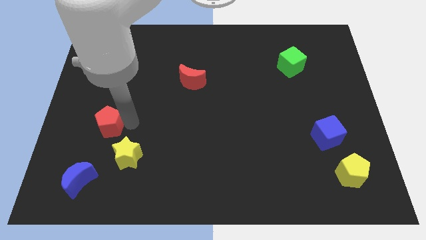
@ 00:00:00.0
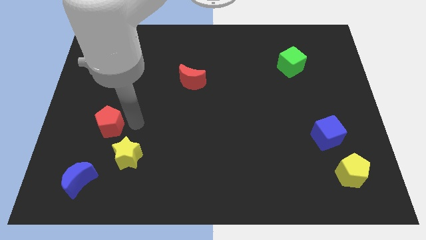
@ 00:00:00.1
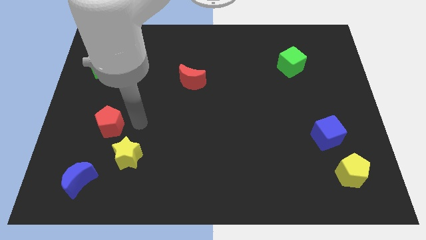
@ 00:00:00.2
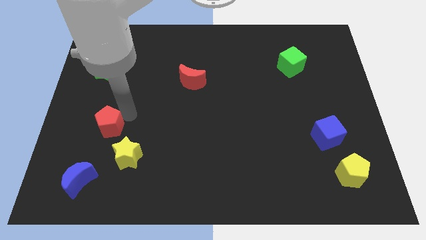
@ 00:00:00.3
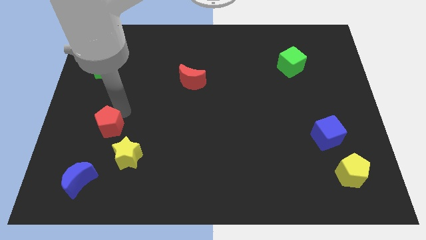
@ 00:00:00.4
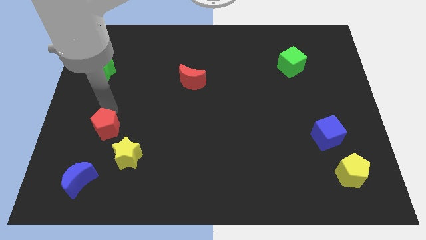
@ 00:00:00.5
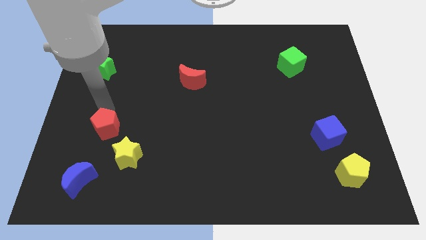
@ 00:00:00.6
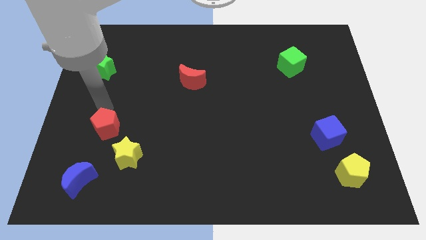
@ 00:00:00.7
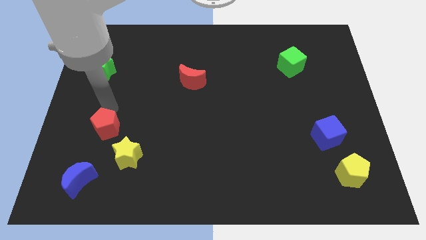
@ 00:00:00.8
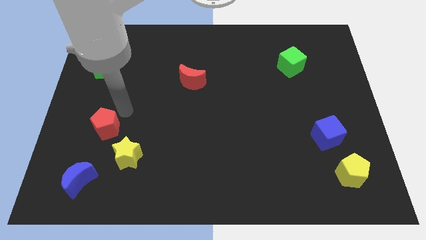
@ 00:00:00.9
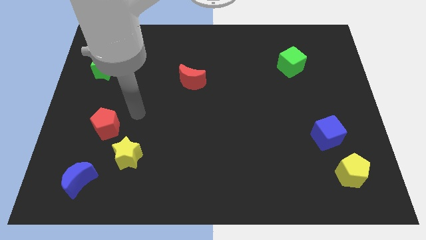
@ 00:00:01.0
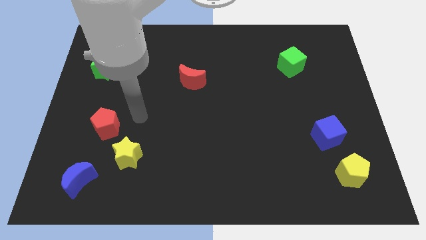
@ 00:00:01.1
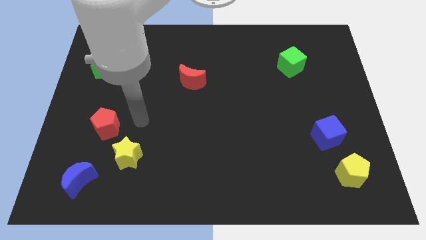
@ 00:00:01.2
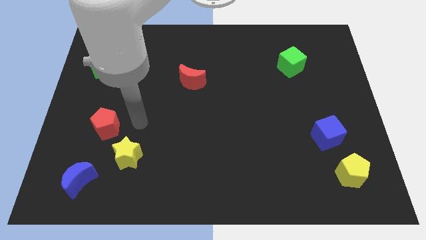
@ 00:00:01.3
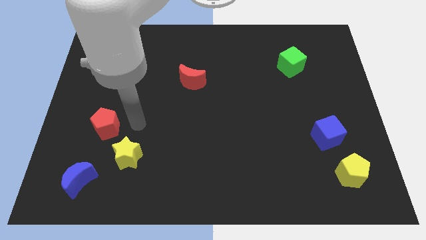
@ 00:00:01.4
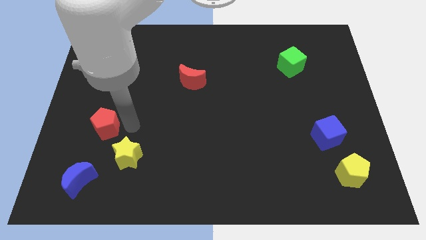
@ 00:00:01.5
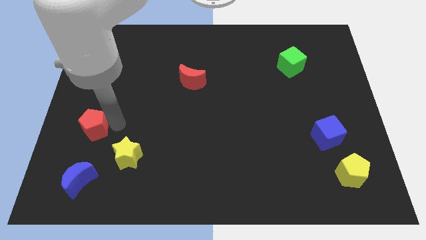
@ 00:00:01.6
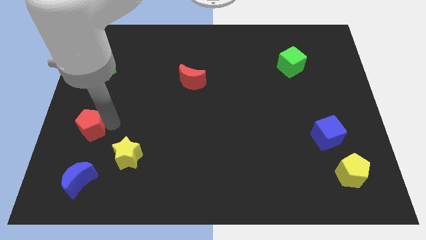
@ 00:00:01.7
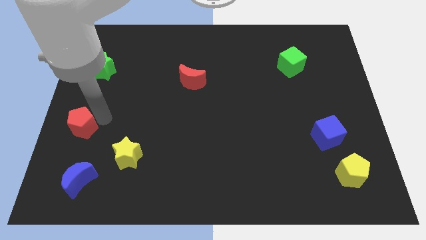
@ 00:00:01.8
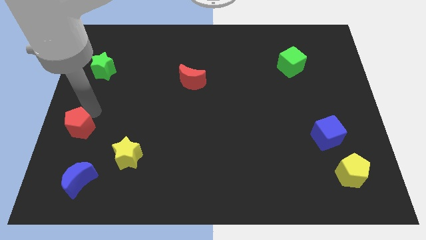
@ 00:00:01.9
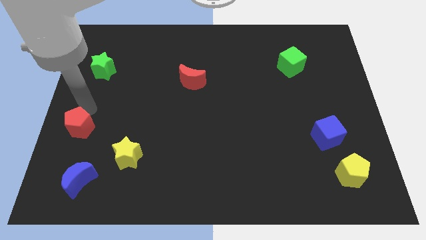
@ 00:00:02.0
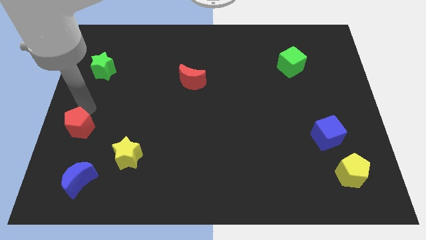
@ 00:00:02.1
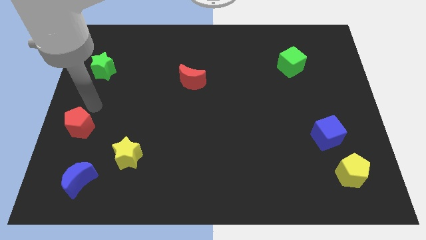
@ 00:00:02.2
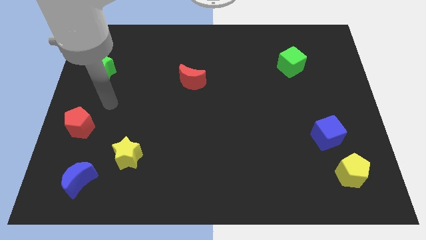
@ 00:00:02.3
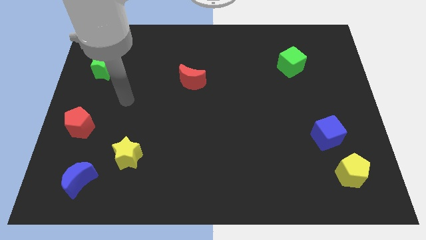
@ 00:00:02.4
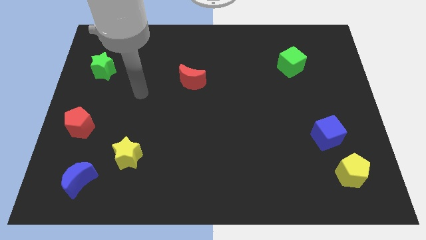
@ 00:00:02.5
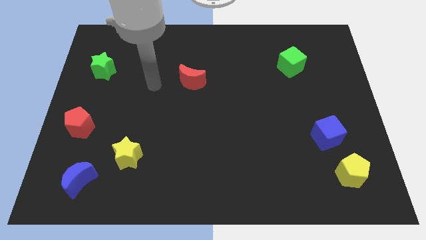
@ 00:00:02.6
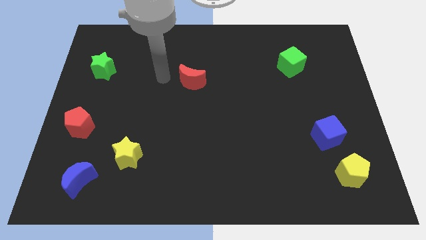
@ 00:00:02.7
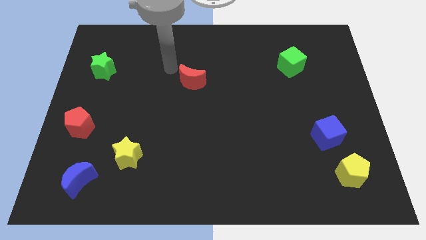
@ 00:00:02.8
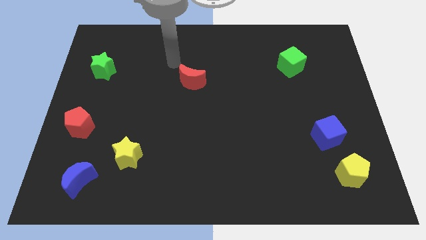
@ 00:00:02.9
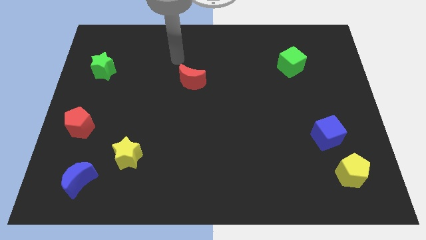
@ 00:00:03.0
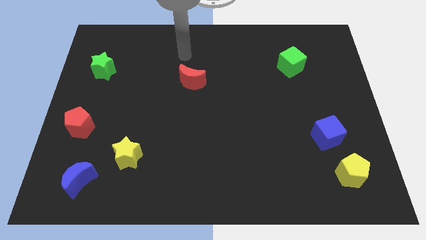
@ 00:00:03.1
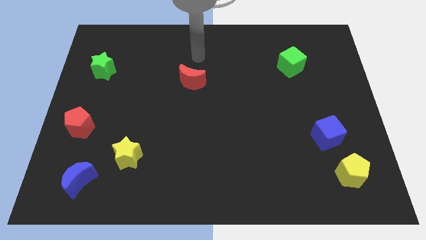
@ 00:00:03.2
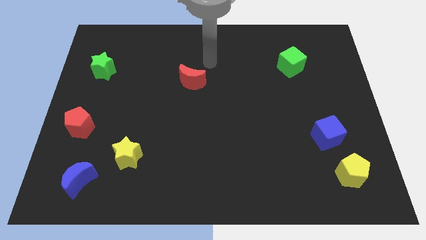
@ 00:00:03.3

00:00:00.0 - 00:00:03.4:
place the red pentagon vertically below the green star

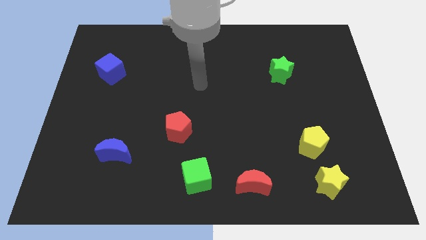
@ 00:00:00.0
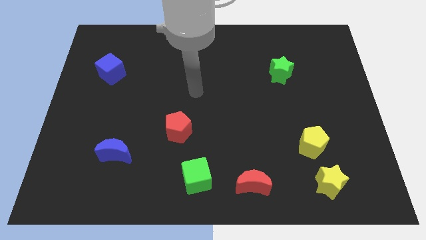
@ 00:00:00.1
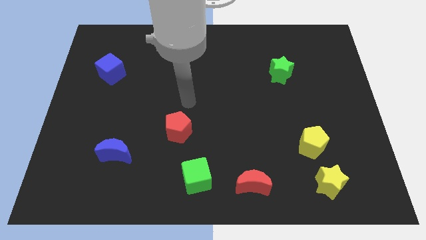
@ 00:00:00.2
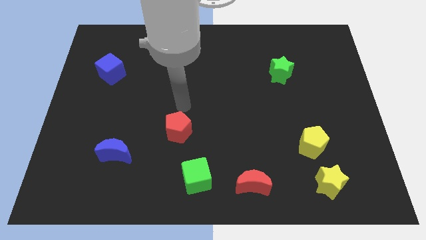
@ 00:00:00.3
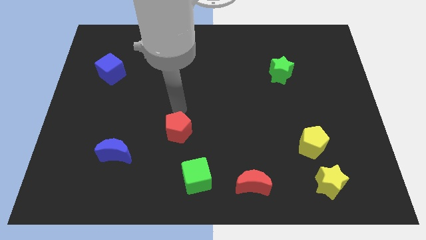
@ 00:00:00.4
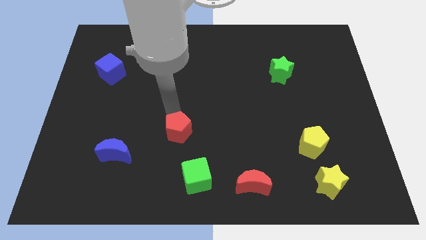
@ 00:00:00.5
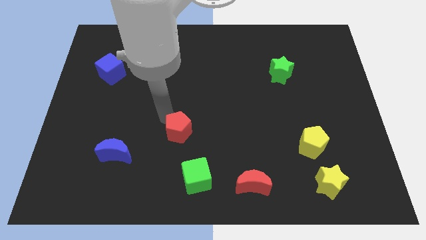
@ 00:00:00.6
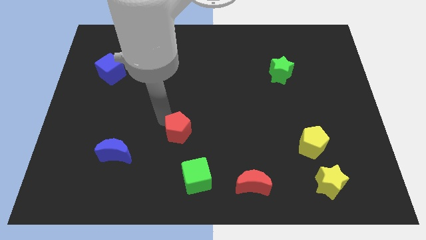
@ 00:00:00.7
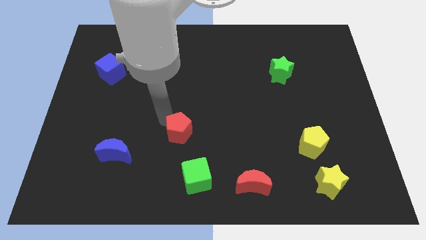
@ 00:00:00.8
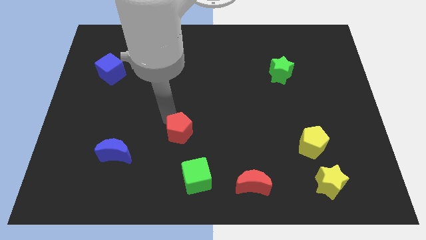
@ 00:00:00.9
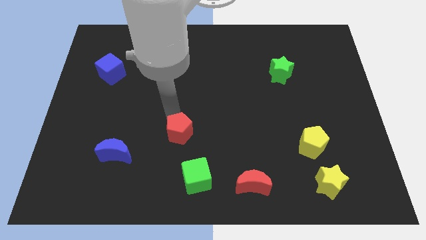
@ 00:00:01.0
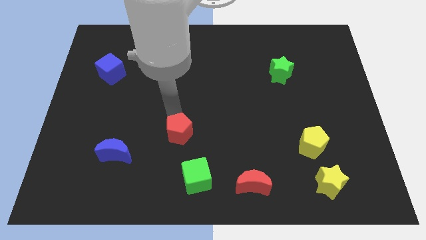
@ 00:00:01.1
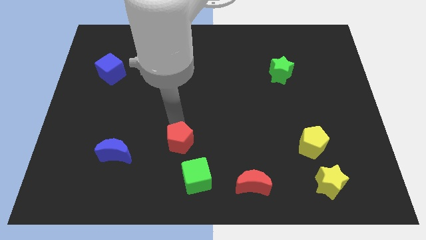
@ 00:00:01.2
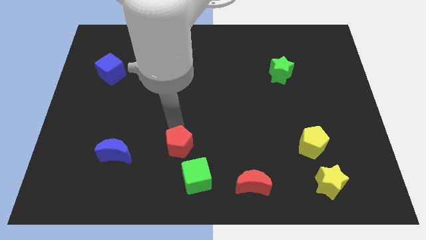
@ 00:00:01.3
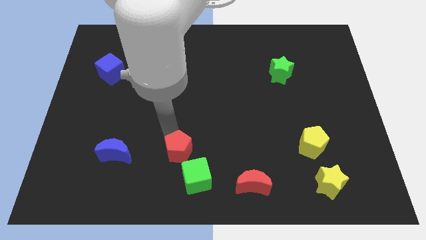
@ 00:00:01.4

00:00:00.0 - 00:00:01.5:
push the red pentagon slightly towards the green block

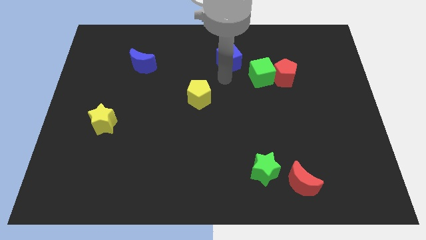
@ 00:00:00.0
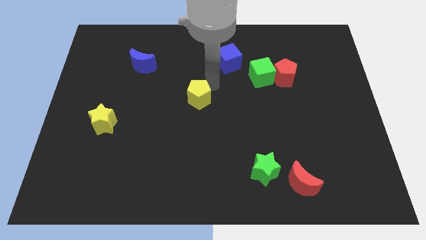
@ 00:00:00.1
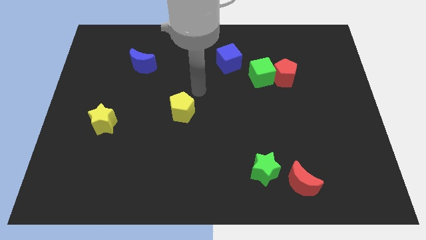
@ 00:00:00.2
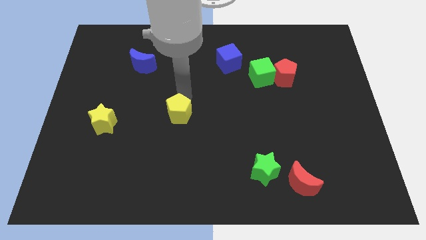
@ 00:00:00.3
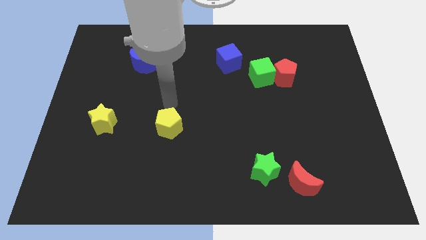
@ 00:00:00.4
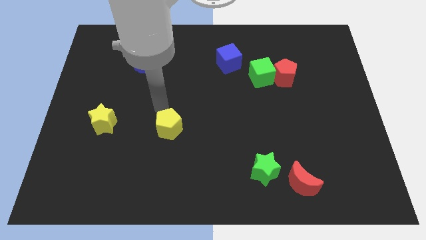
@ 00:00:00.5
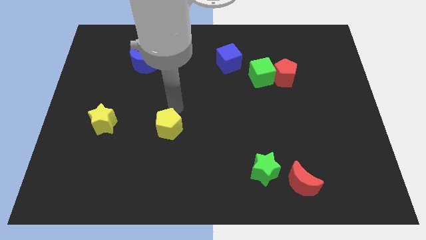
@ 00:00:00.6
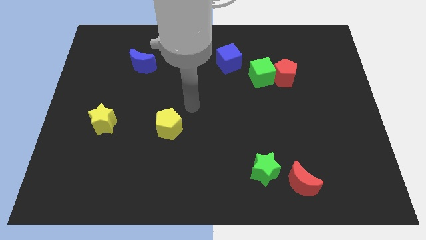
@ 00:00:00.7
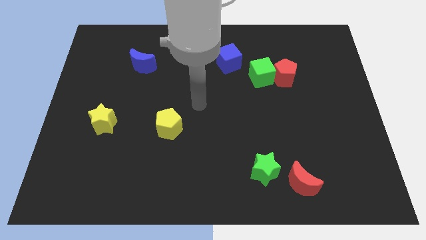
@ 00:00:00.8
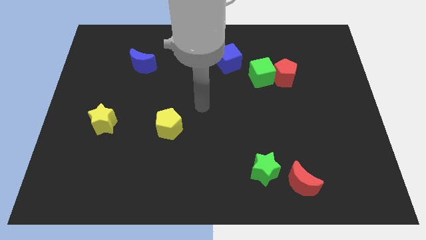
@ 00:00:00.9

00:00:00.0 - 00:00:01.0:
move the yellow pentagon horizontal to the yellow star

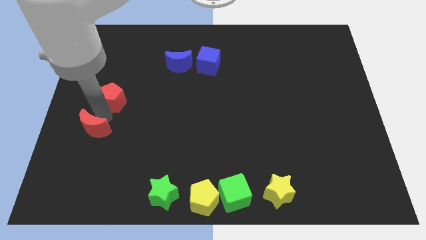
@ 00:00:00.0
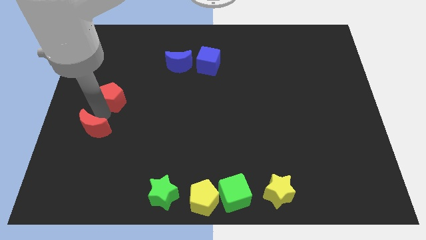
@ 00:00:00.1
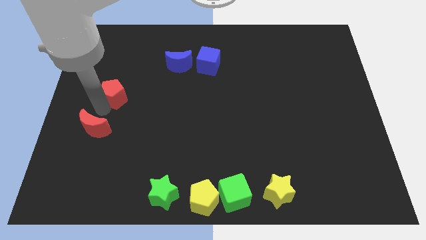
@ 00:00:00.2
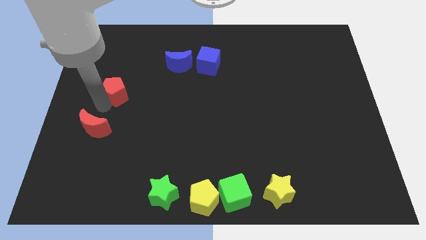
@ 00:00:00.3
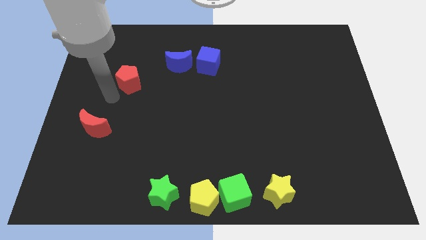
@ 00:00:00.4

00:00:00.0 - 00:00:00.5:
slightly move the red pentagon upwards

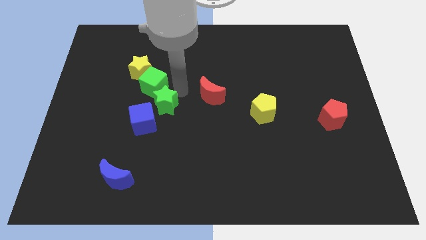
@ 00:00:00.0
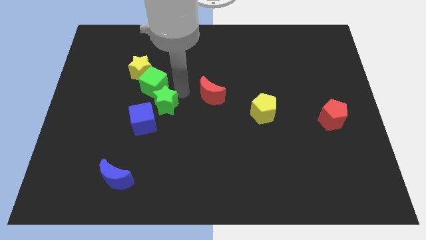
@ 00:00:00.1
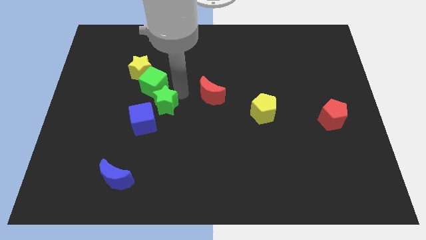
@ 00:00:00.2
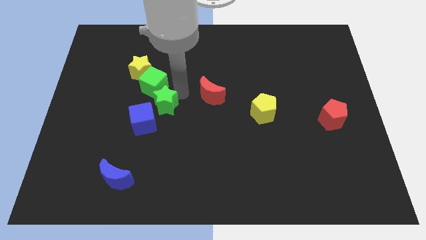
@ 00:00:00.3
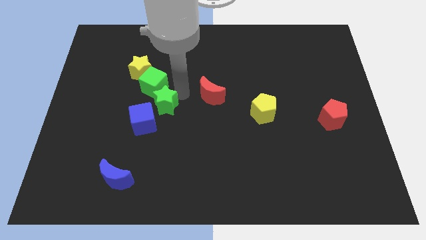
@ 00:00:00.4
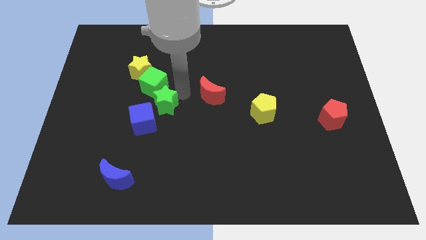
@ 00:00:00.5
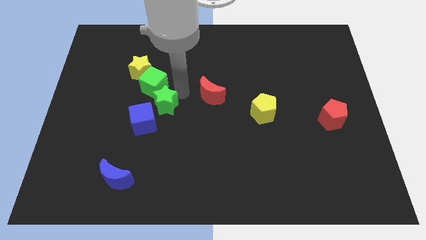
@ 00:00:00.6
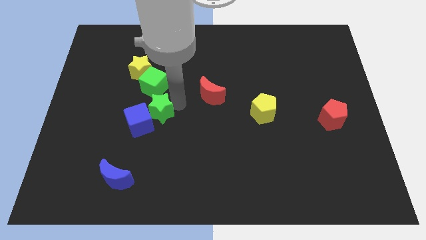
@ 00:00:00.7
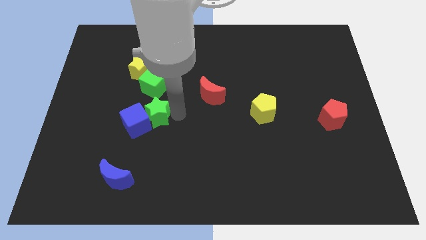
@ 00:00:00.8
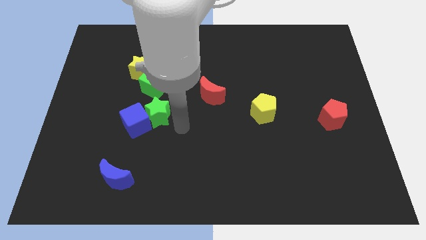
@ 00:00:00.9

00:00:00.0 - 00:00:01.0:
push the green star into the blue cube

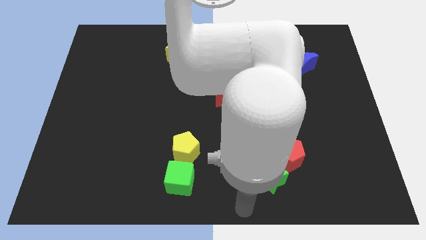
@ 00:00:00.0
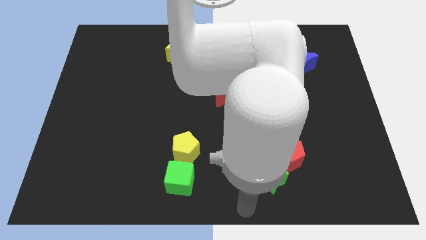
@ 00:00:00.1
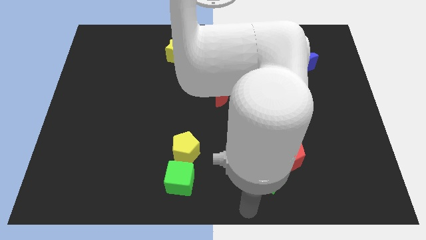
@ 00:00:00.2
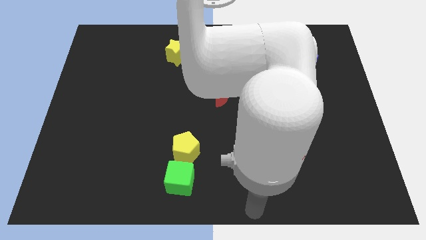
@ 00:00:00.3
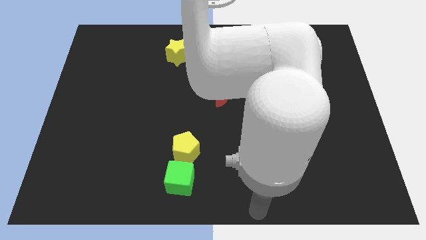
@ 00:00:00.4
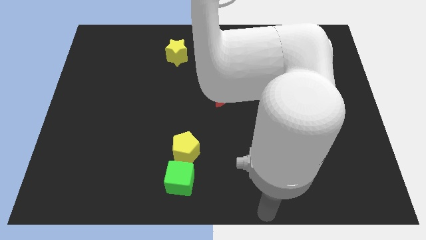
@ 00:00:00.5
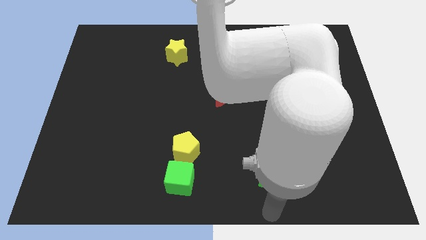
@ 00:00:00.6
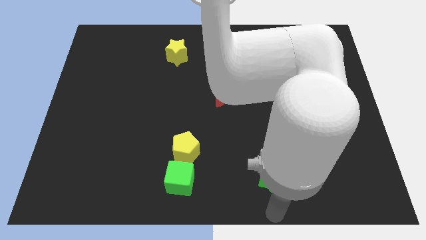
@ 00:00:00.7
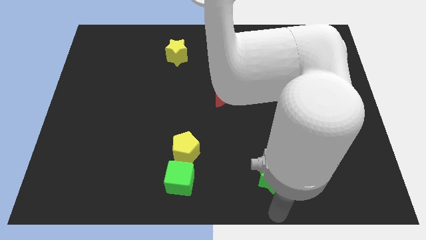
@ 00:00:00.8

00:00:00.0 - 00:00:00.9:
point your arm at the bottom of green star

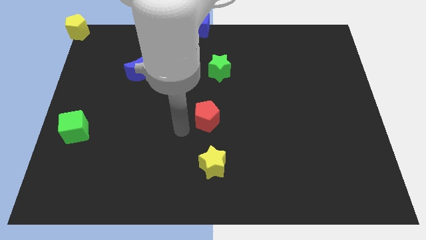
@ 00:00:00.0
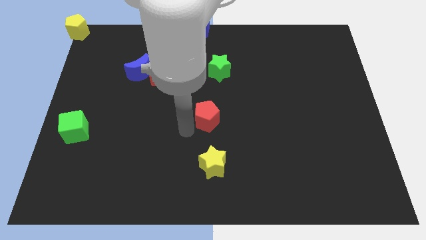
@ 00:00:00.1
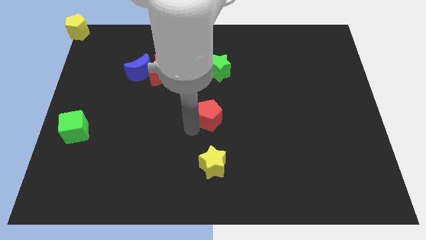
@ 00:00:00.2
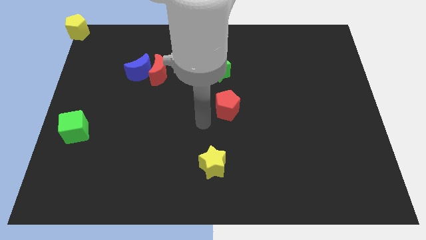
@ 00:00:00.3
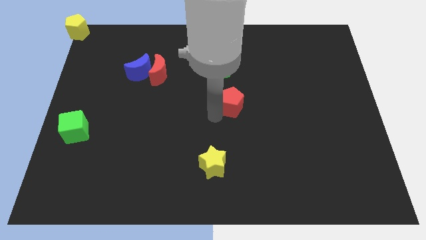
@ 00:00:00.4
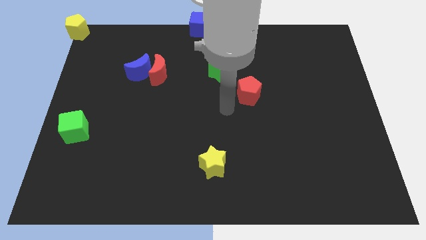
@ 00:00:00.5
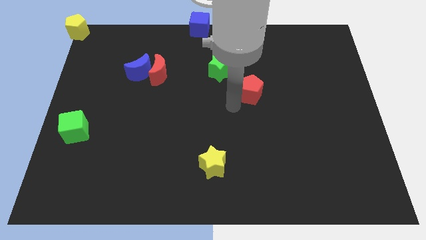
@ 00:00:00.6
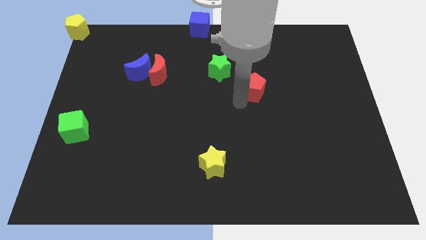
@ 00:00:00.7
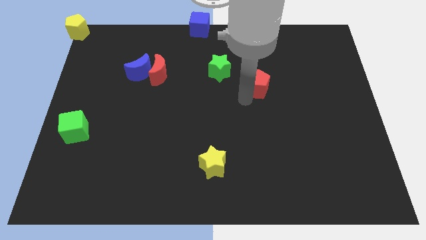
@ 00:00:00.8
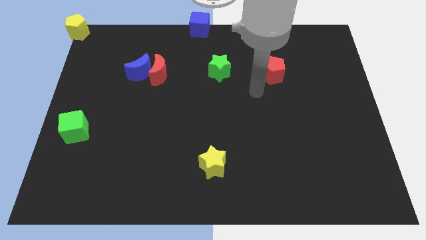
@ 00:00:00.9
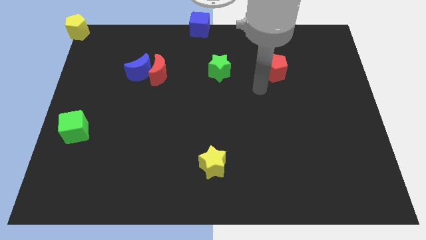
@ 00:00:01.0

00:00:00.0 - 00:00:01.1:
place the red pentagon right to the green star
